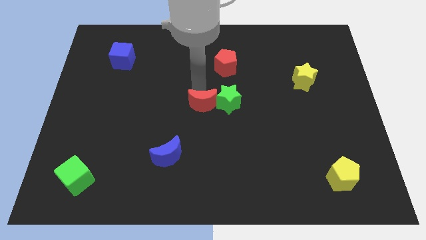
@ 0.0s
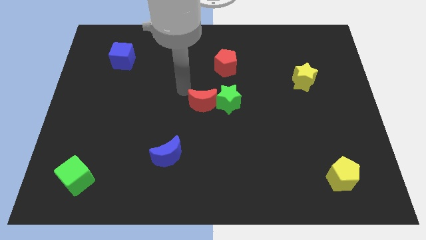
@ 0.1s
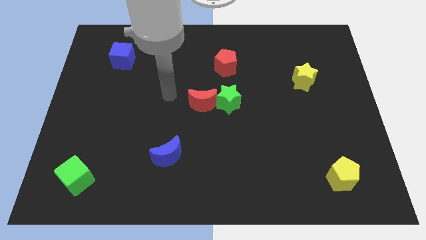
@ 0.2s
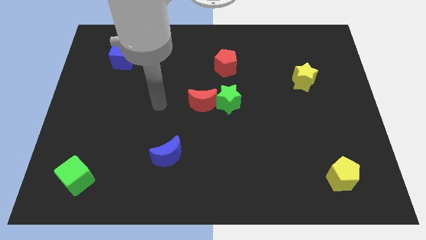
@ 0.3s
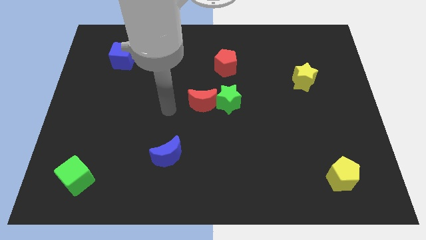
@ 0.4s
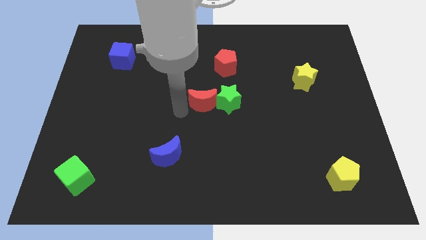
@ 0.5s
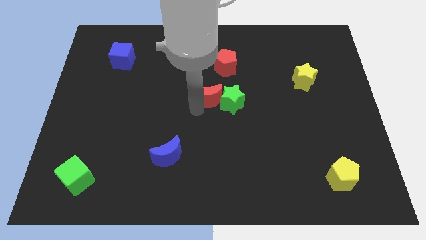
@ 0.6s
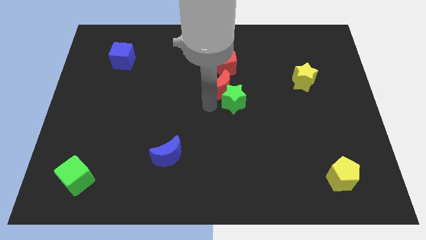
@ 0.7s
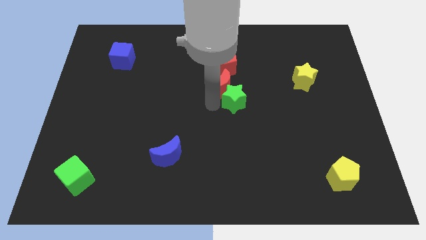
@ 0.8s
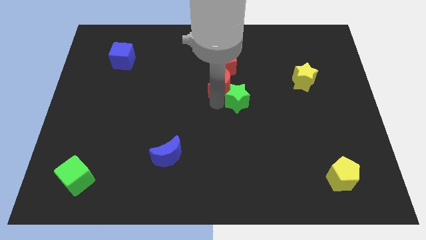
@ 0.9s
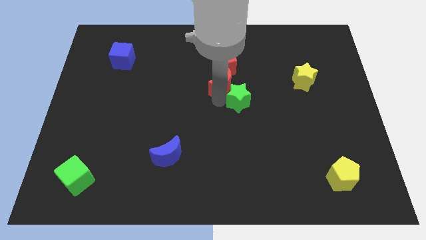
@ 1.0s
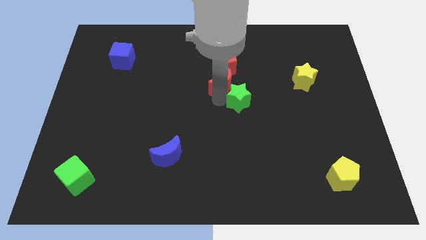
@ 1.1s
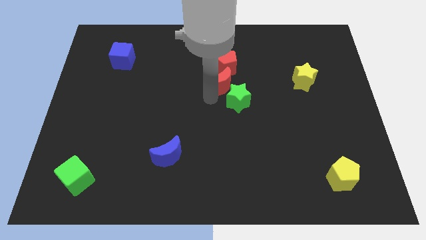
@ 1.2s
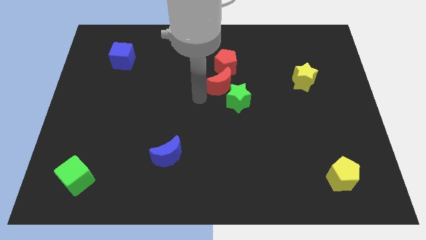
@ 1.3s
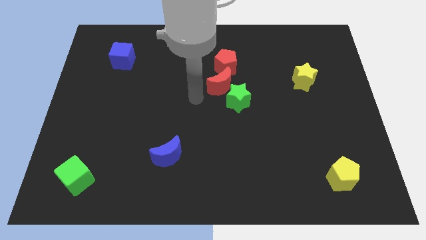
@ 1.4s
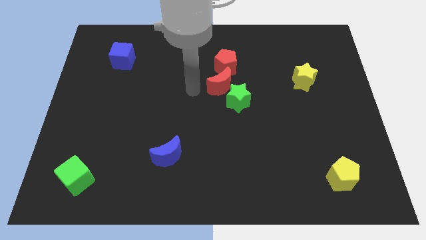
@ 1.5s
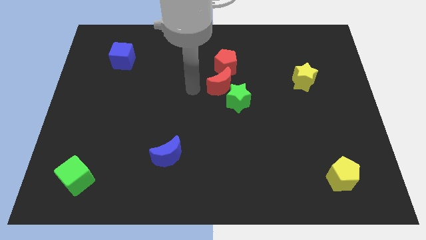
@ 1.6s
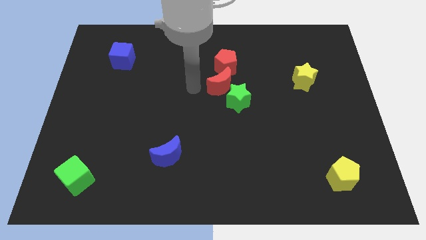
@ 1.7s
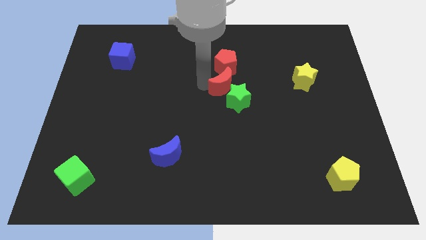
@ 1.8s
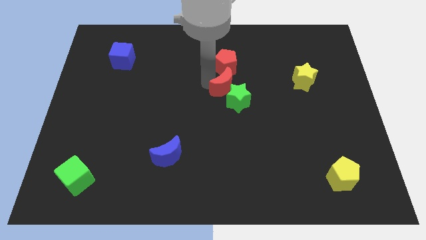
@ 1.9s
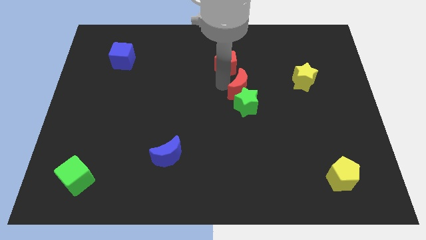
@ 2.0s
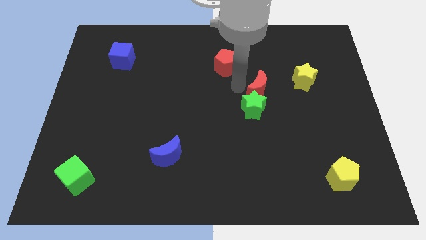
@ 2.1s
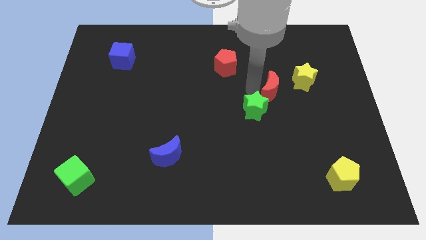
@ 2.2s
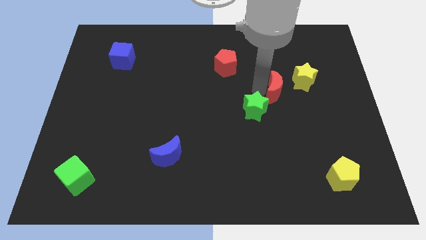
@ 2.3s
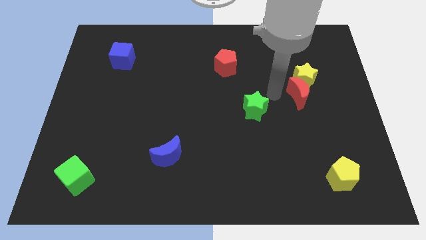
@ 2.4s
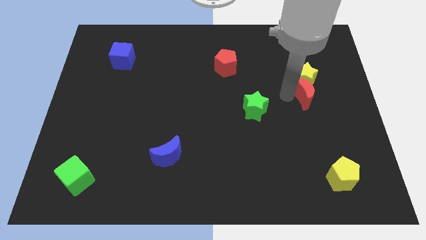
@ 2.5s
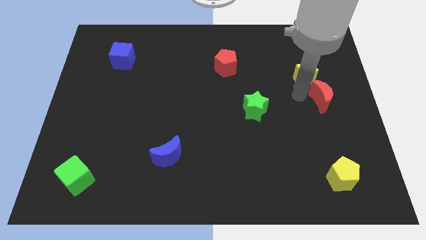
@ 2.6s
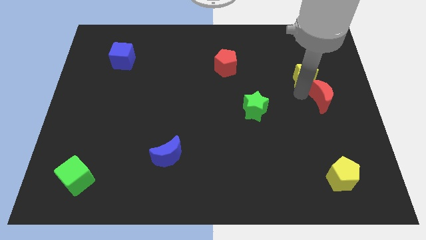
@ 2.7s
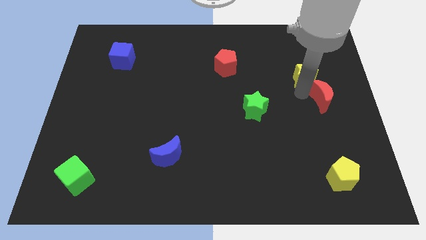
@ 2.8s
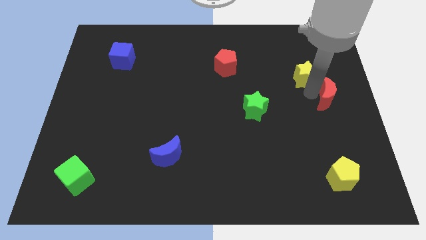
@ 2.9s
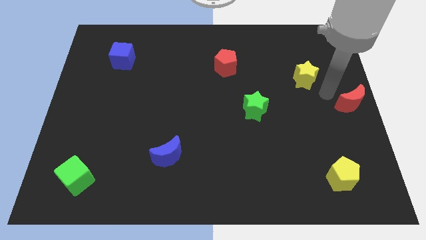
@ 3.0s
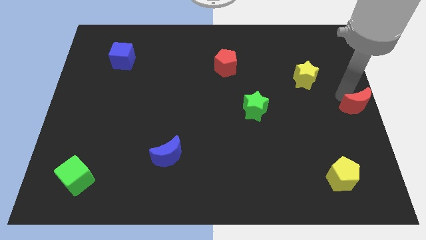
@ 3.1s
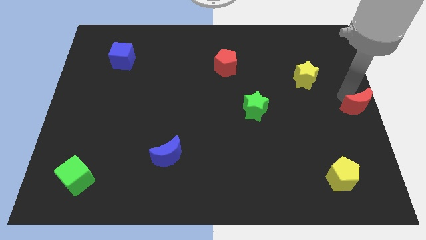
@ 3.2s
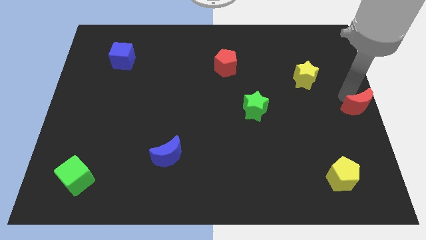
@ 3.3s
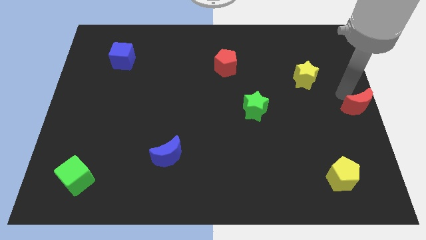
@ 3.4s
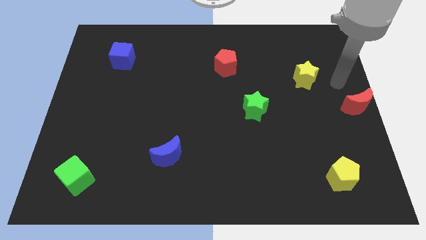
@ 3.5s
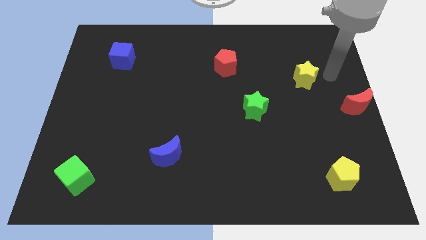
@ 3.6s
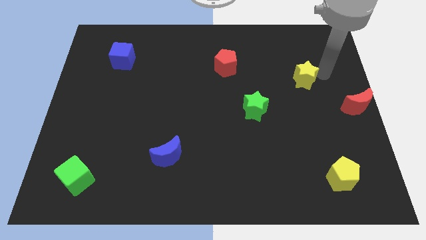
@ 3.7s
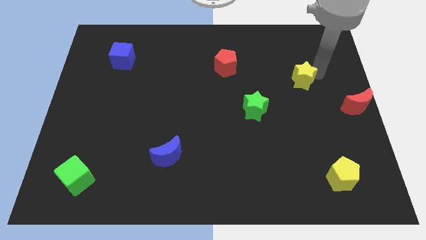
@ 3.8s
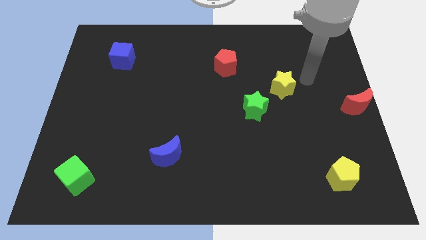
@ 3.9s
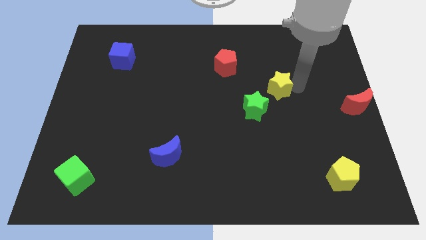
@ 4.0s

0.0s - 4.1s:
place the red crescent horizontally to the right side of the green star

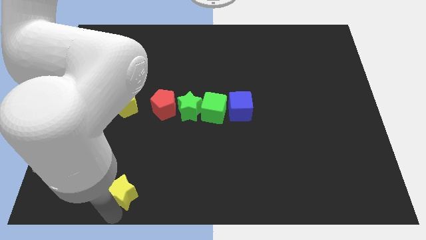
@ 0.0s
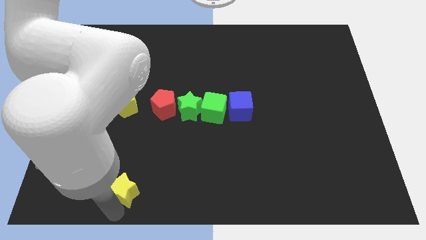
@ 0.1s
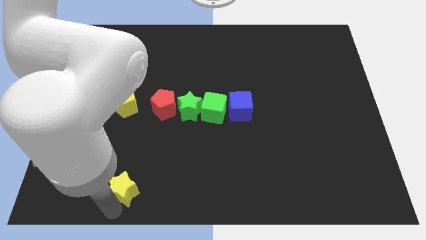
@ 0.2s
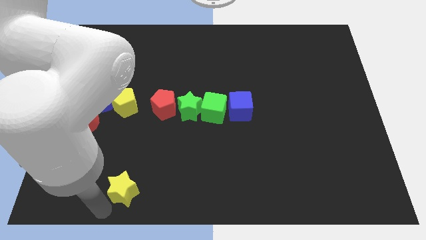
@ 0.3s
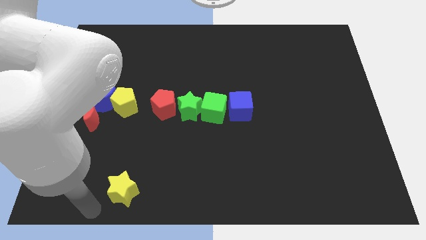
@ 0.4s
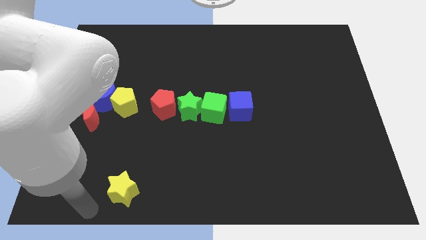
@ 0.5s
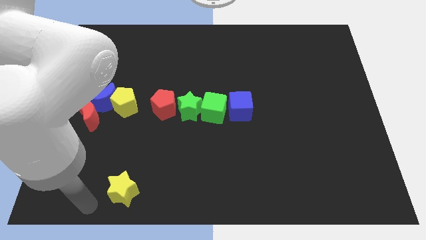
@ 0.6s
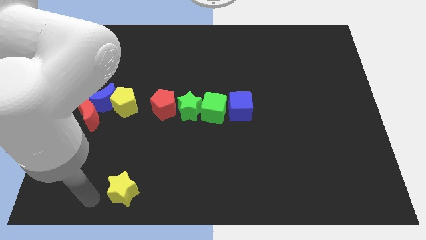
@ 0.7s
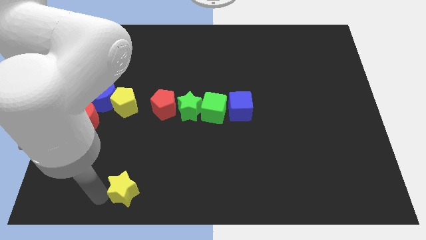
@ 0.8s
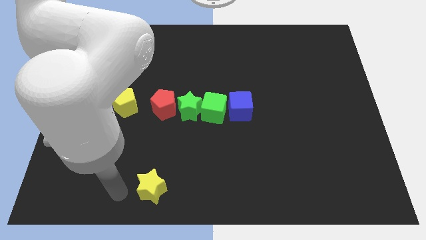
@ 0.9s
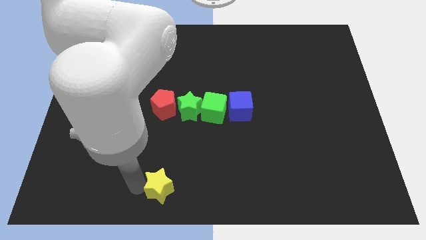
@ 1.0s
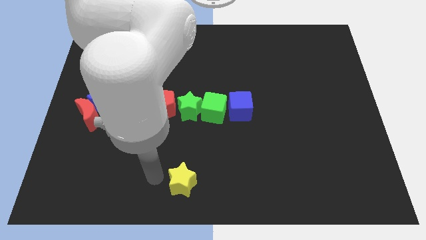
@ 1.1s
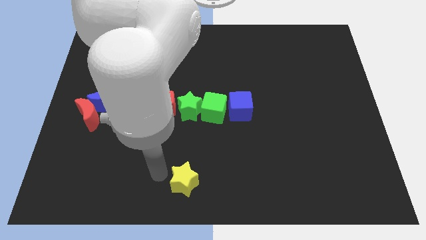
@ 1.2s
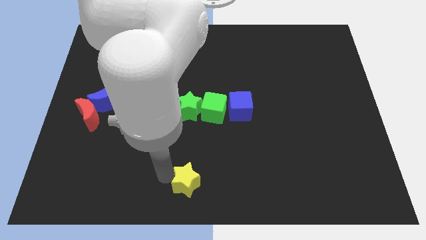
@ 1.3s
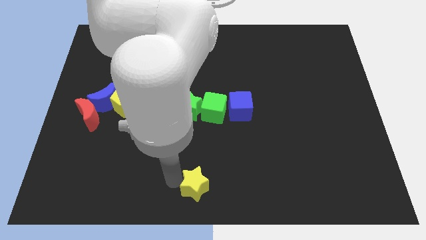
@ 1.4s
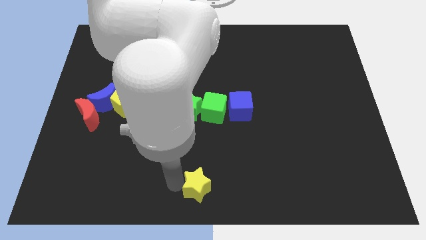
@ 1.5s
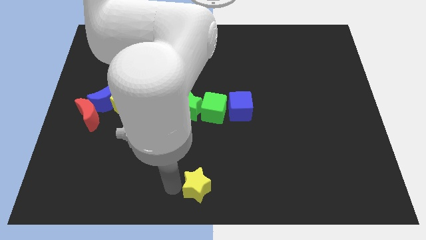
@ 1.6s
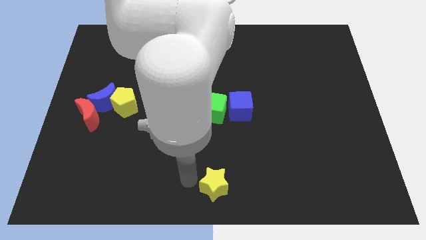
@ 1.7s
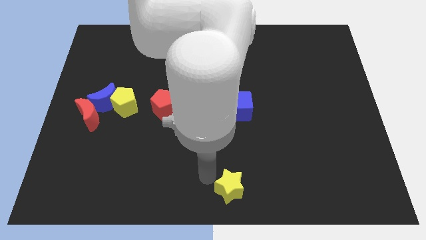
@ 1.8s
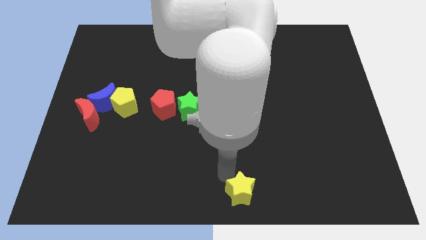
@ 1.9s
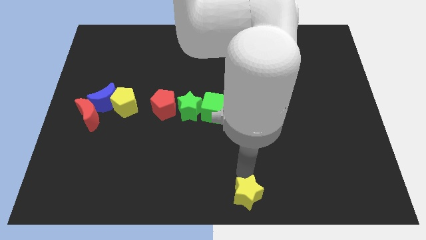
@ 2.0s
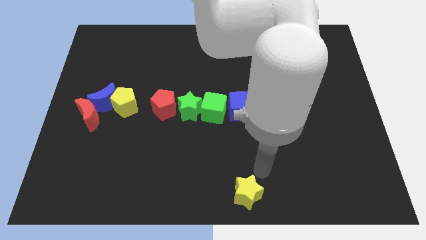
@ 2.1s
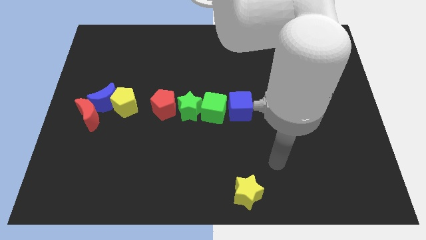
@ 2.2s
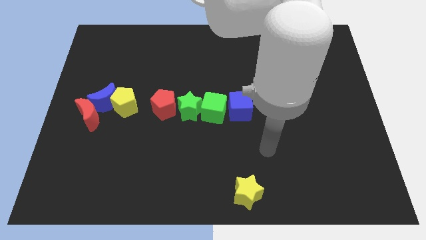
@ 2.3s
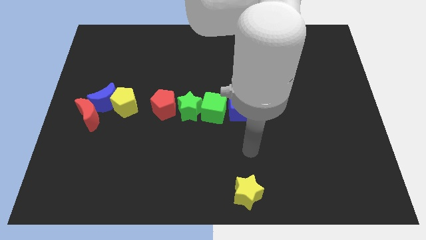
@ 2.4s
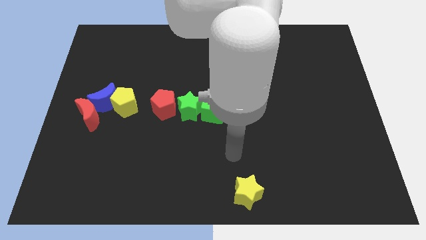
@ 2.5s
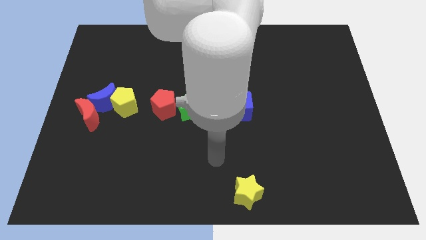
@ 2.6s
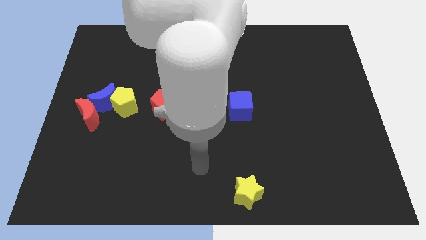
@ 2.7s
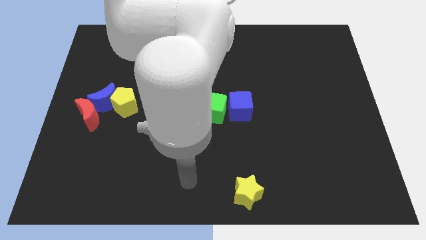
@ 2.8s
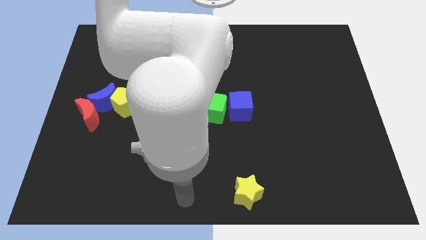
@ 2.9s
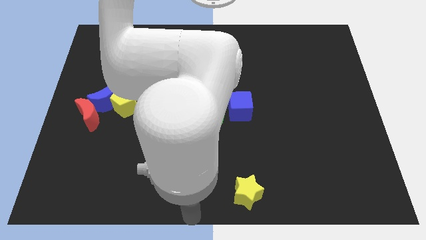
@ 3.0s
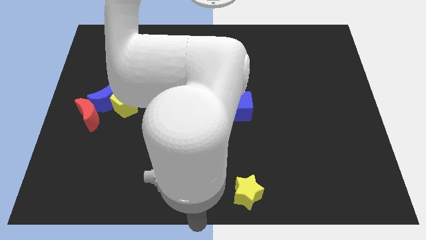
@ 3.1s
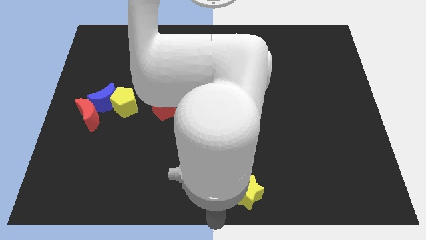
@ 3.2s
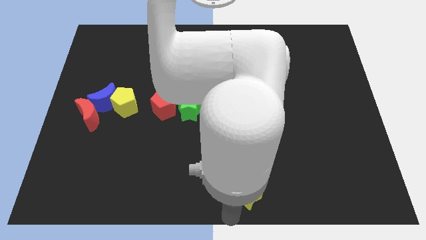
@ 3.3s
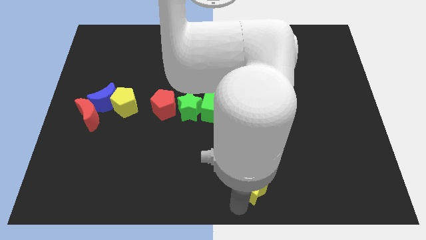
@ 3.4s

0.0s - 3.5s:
place the arm below the yellow star

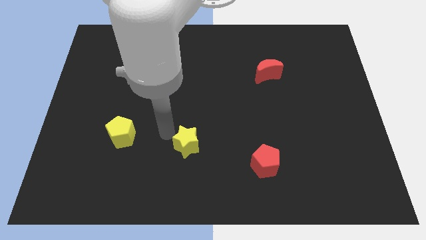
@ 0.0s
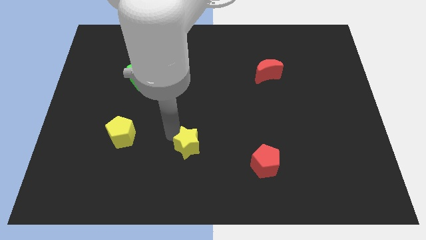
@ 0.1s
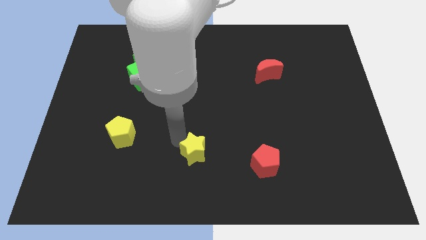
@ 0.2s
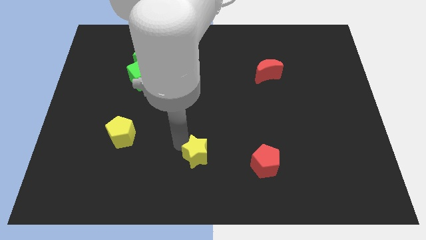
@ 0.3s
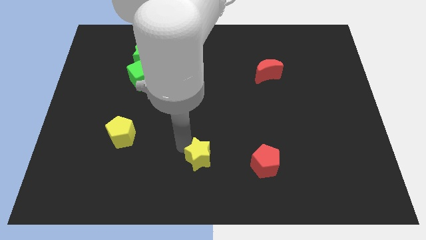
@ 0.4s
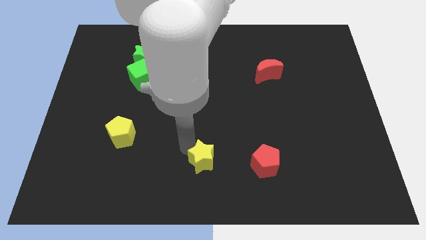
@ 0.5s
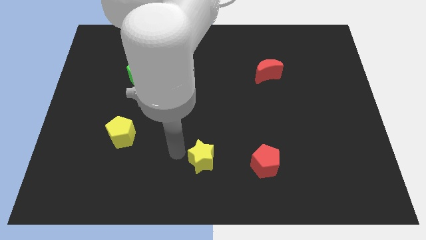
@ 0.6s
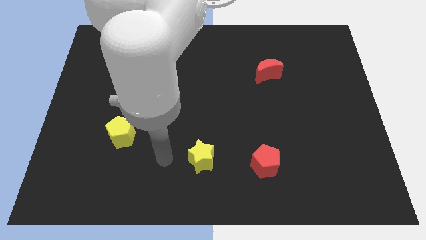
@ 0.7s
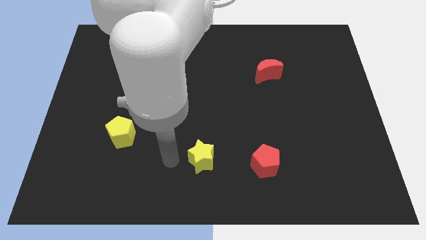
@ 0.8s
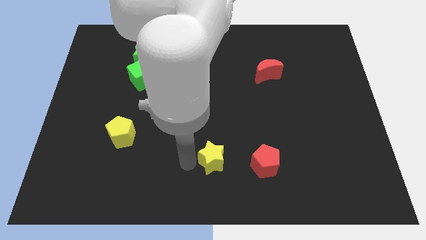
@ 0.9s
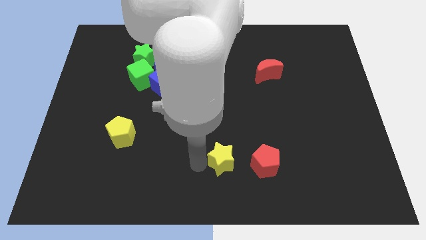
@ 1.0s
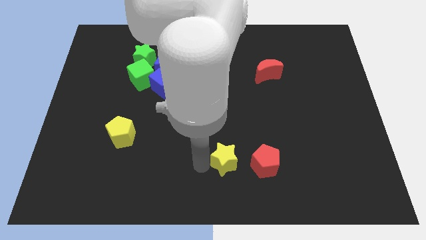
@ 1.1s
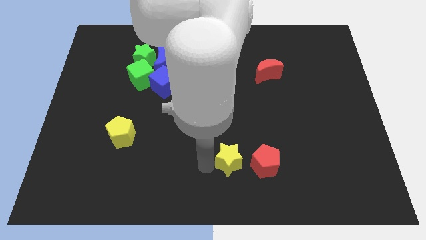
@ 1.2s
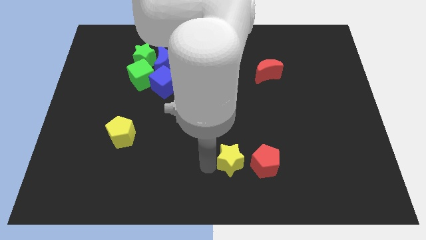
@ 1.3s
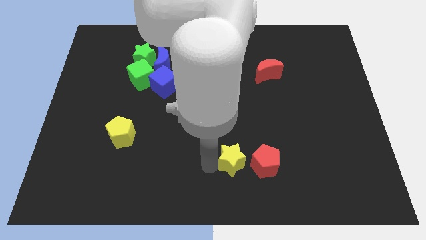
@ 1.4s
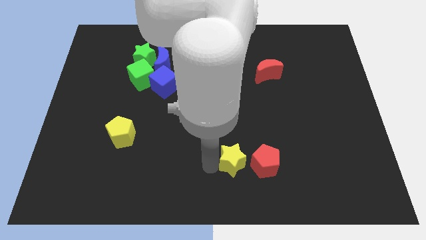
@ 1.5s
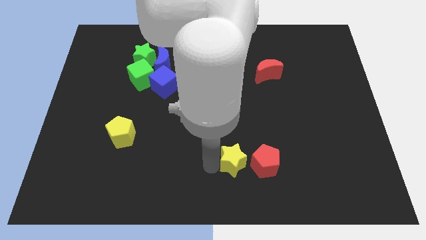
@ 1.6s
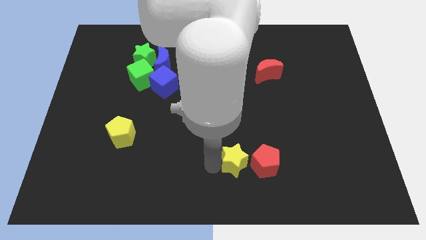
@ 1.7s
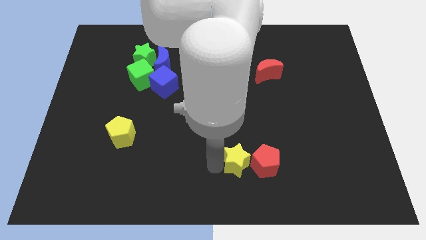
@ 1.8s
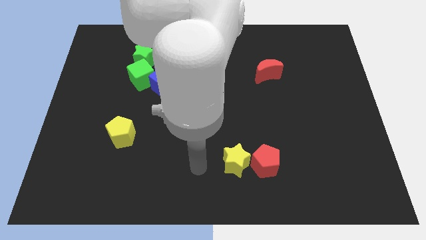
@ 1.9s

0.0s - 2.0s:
slide the yellow star into the left side of the red pentagon
